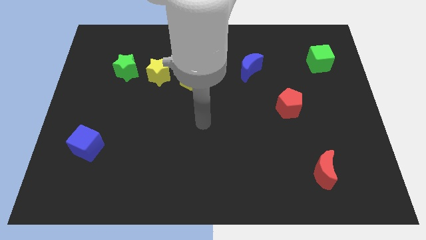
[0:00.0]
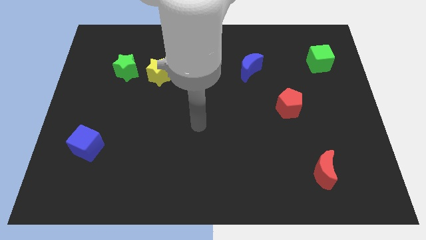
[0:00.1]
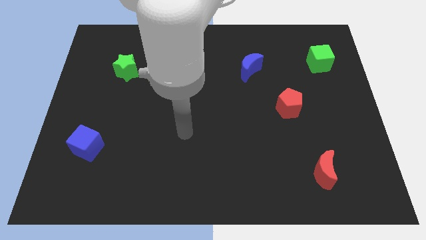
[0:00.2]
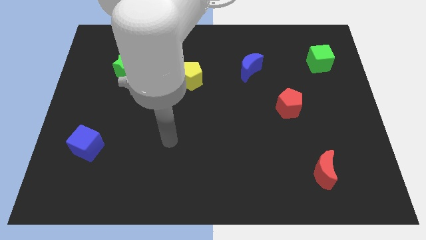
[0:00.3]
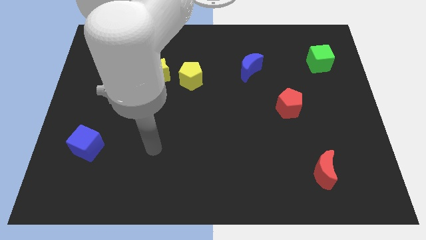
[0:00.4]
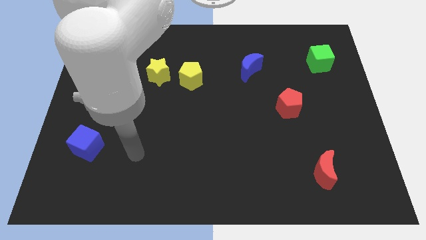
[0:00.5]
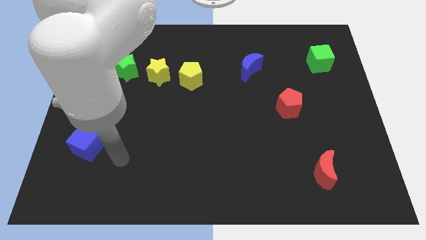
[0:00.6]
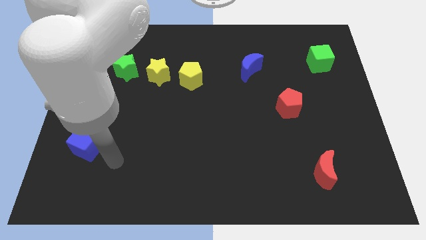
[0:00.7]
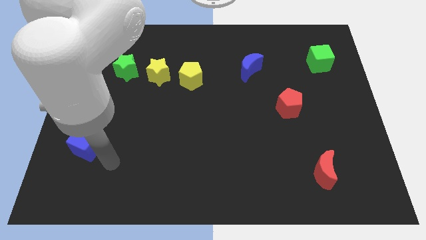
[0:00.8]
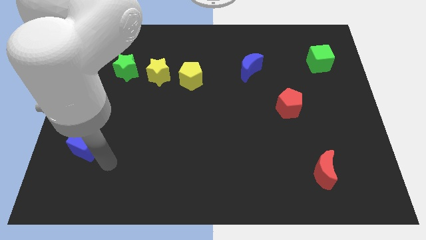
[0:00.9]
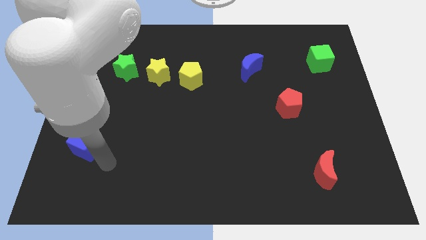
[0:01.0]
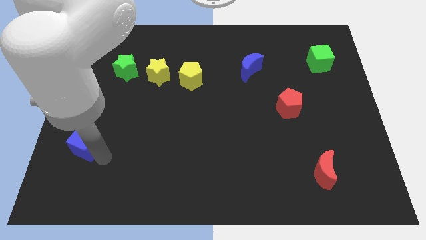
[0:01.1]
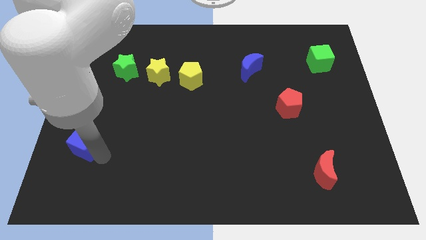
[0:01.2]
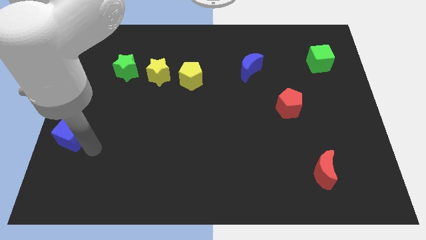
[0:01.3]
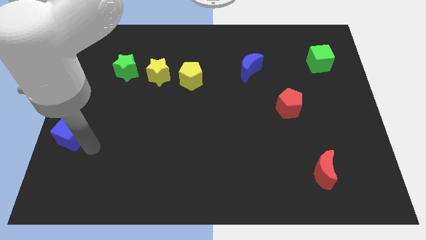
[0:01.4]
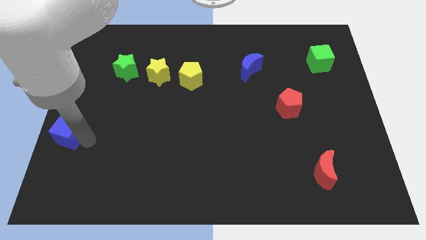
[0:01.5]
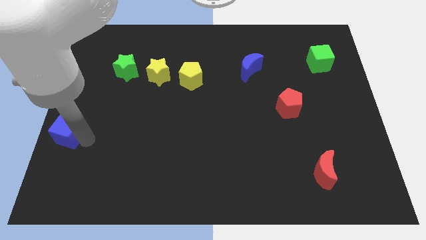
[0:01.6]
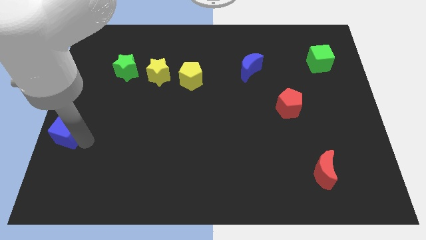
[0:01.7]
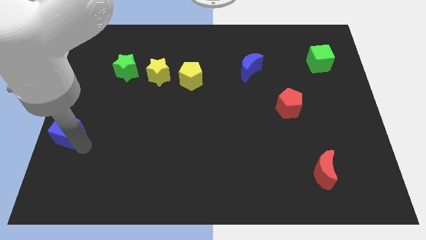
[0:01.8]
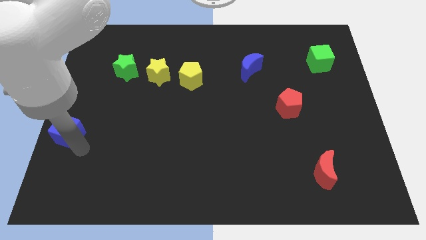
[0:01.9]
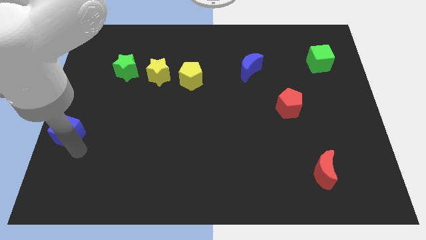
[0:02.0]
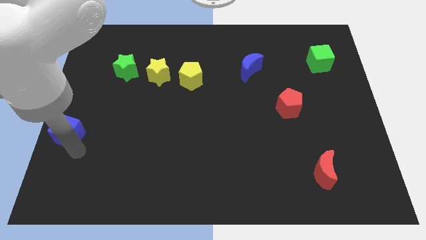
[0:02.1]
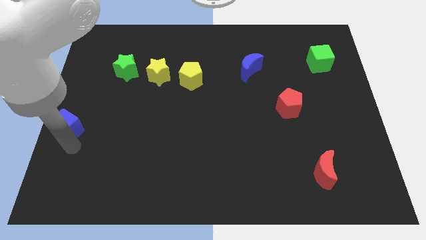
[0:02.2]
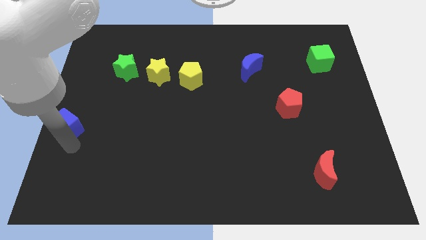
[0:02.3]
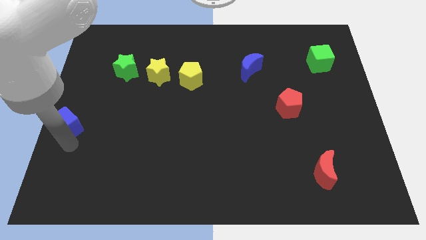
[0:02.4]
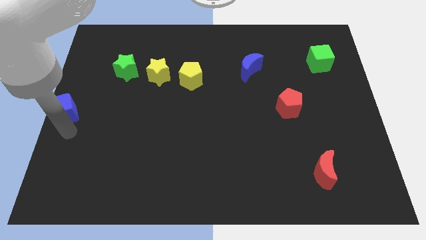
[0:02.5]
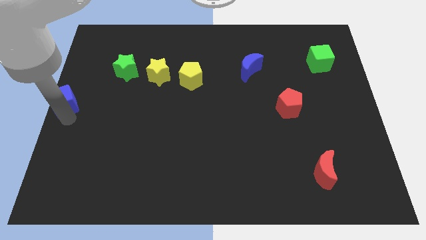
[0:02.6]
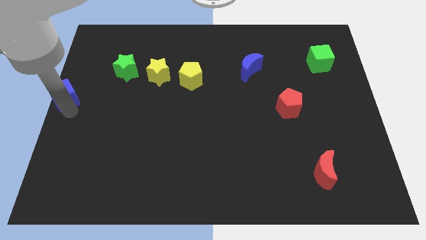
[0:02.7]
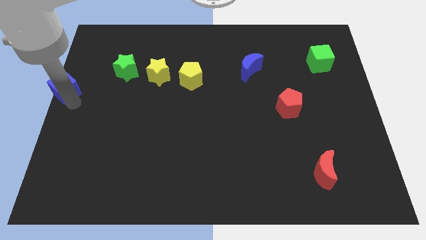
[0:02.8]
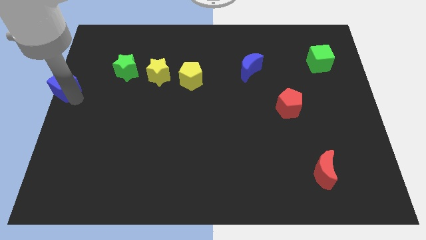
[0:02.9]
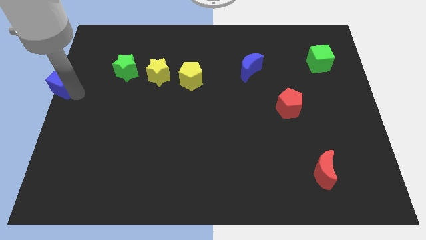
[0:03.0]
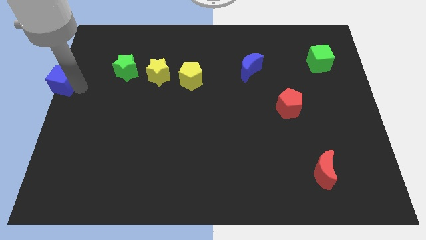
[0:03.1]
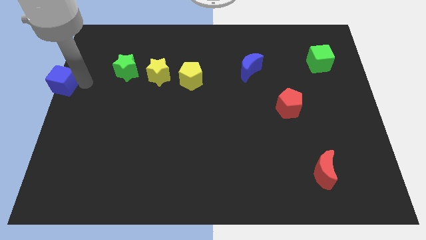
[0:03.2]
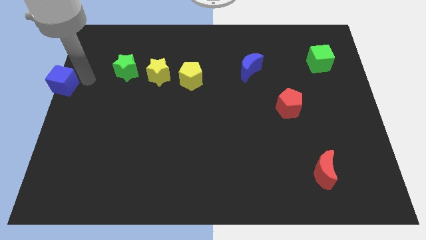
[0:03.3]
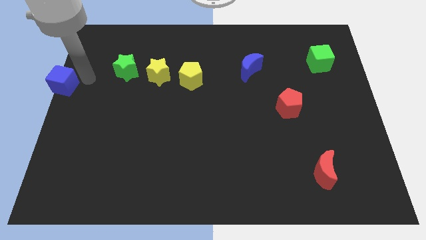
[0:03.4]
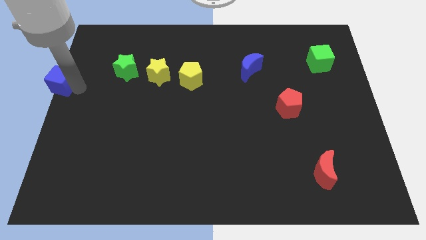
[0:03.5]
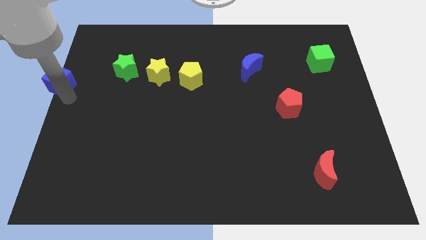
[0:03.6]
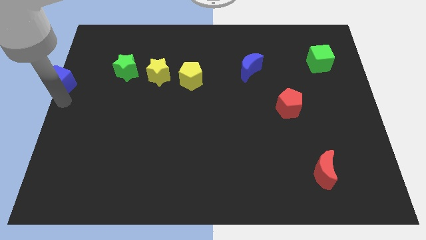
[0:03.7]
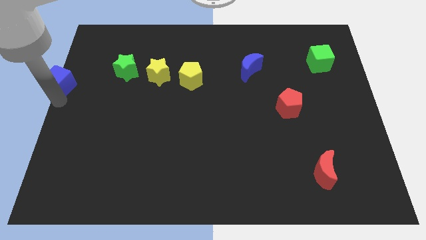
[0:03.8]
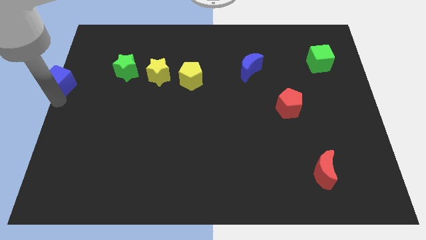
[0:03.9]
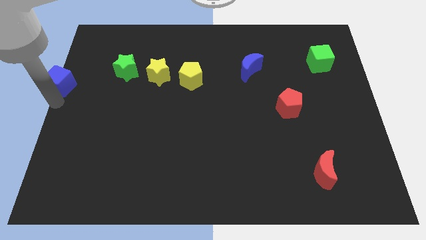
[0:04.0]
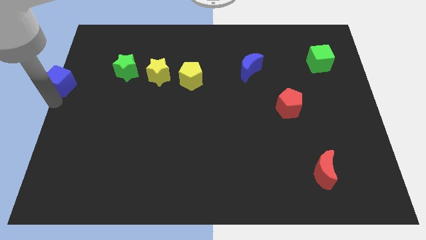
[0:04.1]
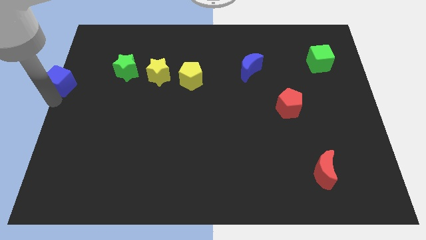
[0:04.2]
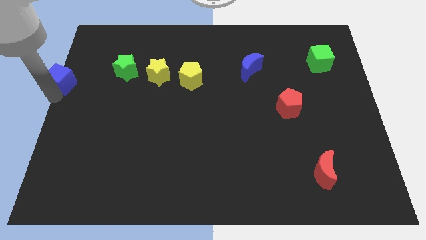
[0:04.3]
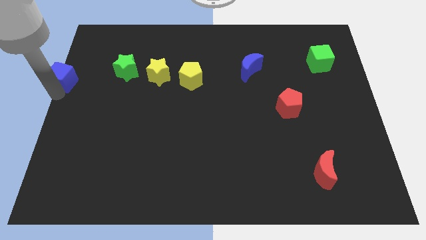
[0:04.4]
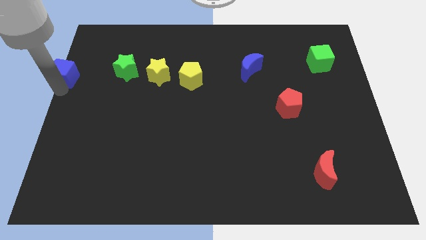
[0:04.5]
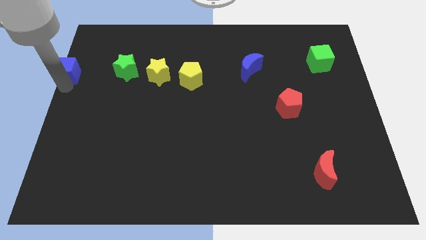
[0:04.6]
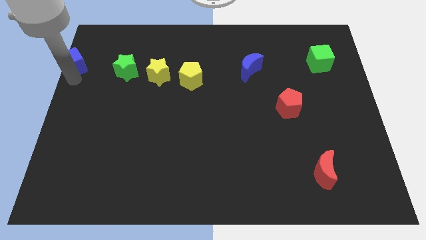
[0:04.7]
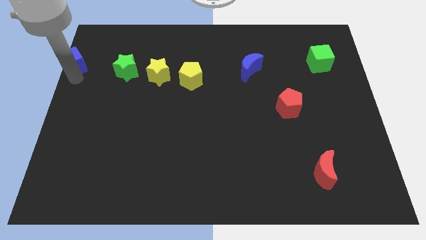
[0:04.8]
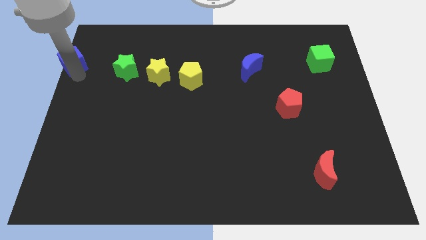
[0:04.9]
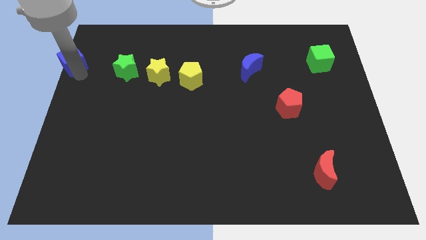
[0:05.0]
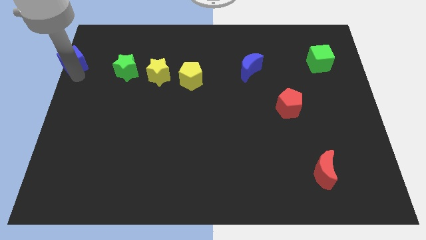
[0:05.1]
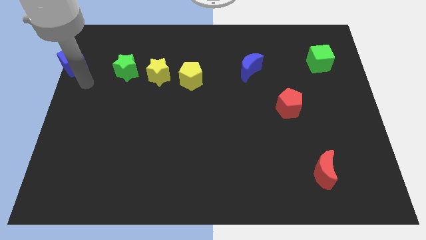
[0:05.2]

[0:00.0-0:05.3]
move the blue cube to the left side of the green star

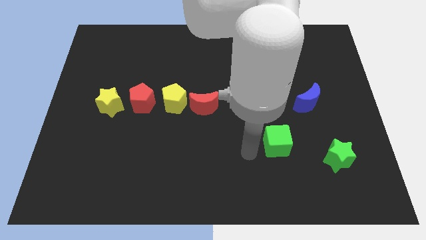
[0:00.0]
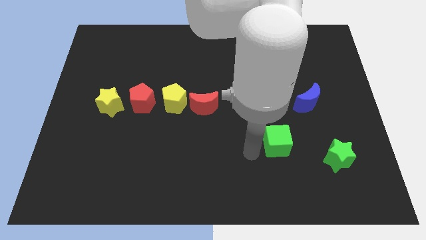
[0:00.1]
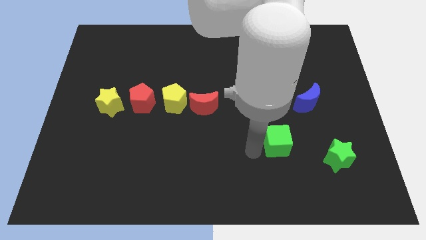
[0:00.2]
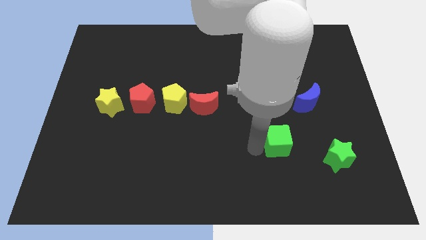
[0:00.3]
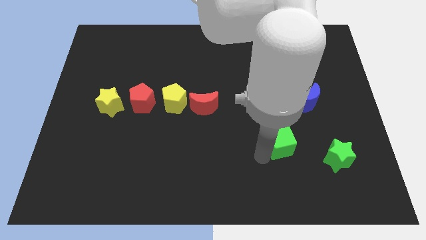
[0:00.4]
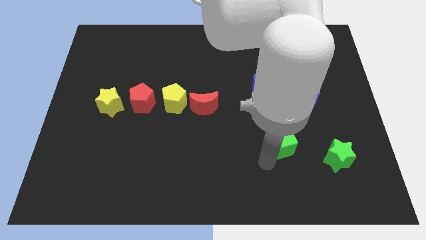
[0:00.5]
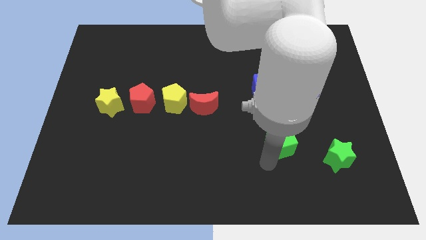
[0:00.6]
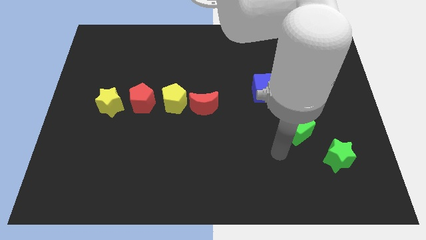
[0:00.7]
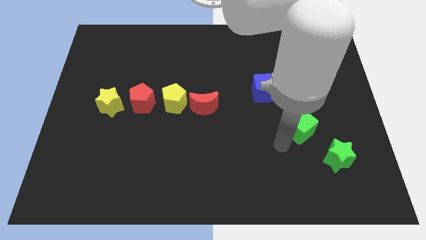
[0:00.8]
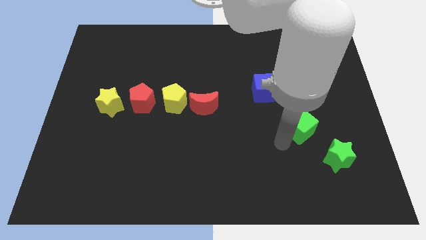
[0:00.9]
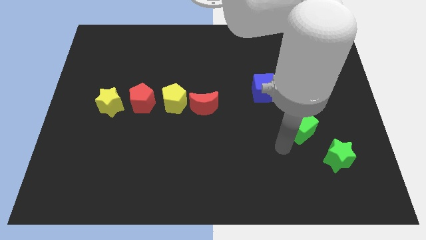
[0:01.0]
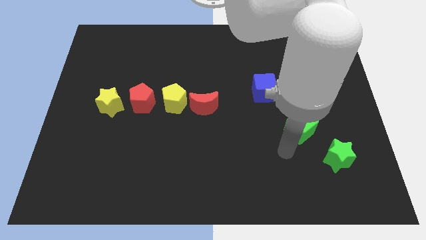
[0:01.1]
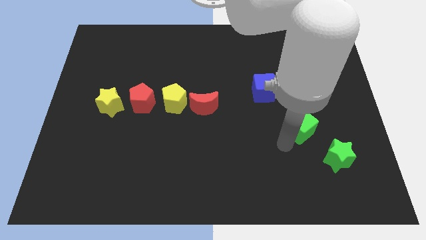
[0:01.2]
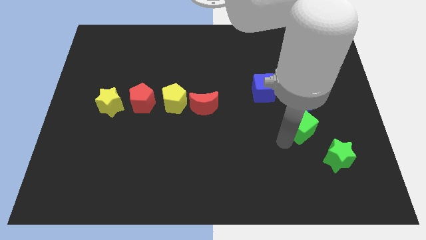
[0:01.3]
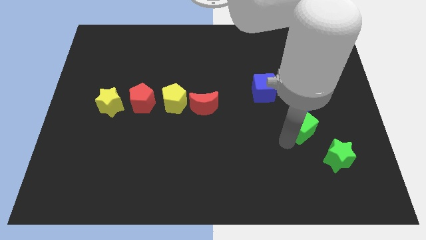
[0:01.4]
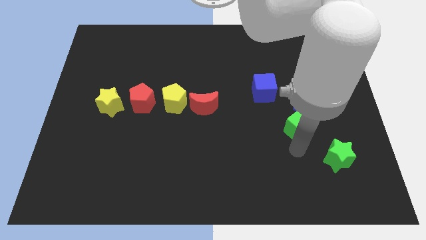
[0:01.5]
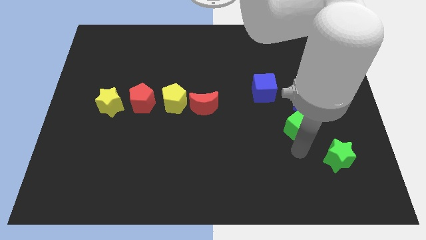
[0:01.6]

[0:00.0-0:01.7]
place the green cube below the blue crescent

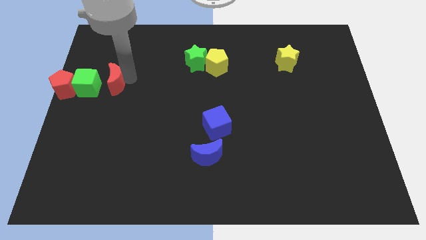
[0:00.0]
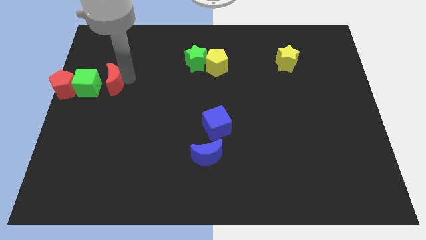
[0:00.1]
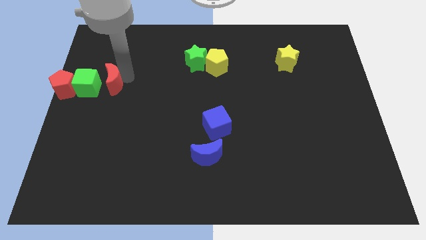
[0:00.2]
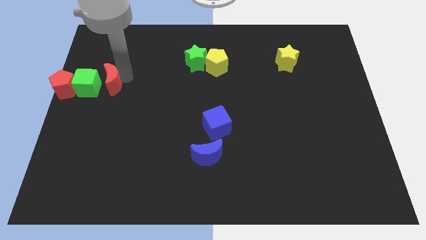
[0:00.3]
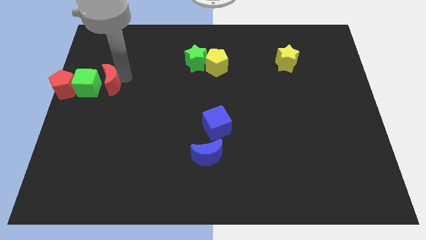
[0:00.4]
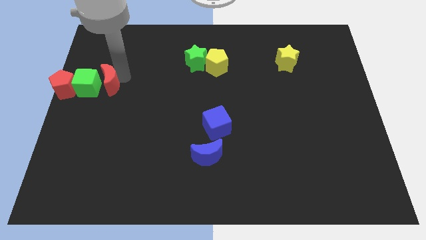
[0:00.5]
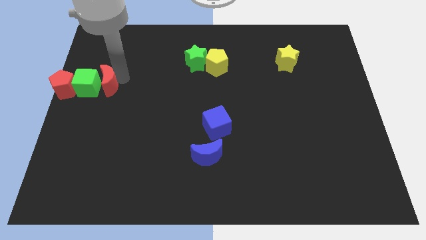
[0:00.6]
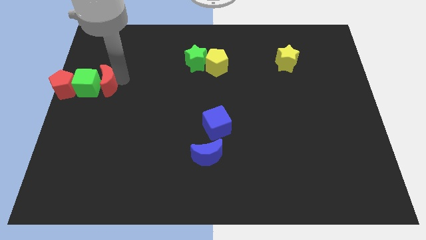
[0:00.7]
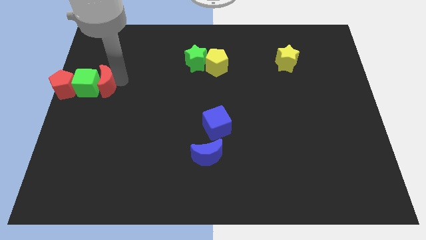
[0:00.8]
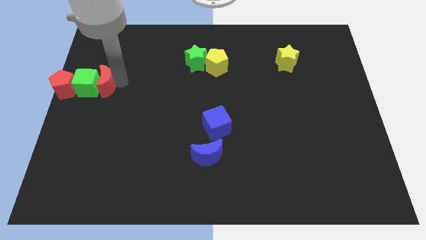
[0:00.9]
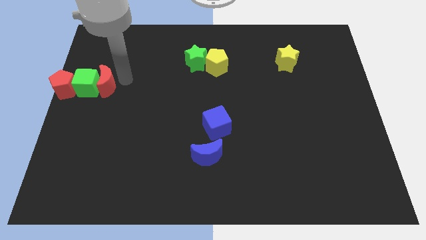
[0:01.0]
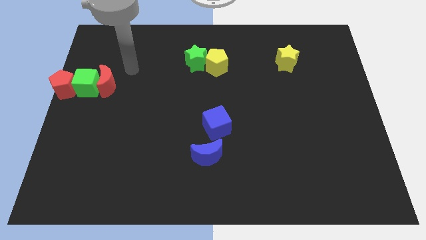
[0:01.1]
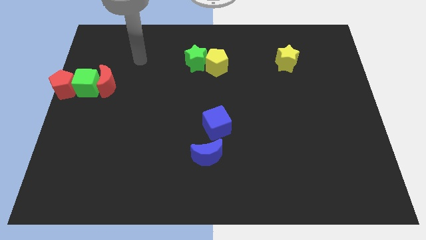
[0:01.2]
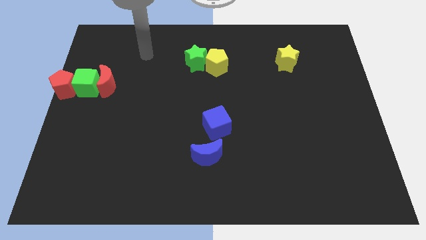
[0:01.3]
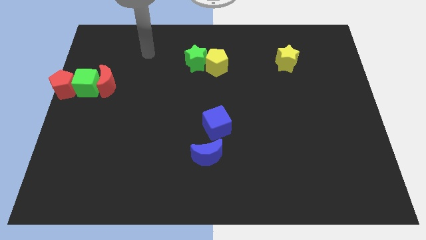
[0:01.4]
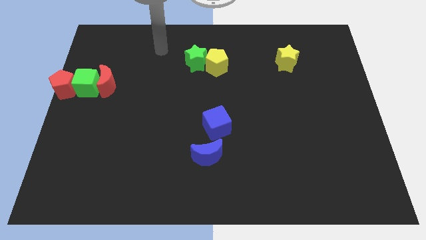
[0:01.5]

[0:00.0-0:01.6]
push the red moon into the green cube

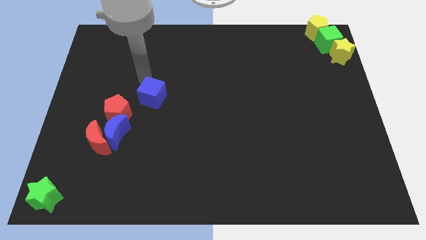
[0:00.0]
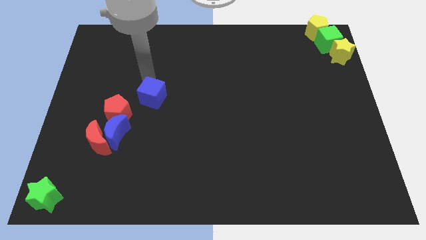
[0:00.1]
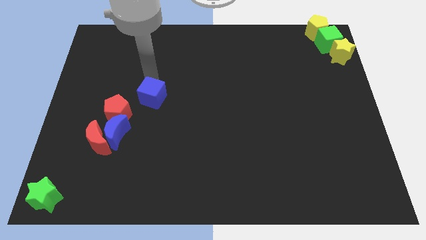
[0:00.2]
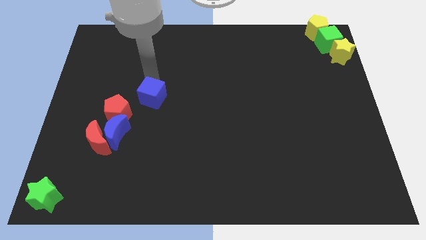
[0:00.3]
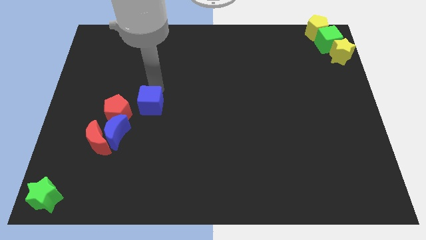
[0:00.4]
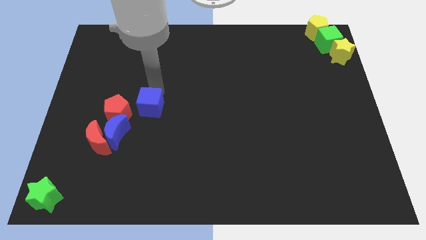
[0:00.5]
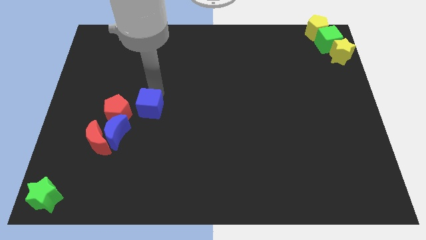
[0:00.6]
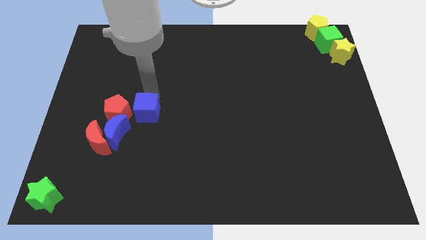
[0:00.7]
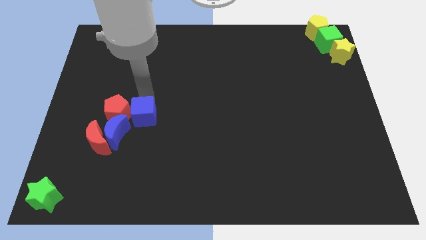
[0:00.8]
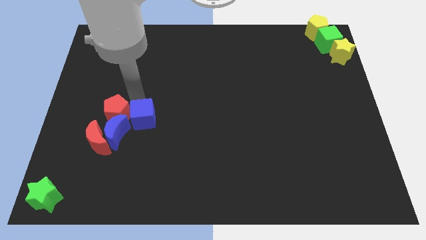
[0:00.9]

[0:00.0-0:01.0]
place the blue cube right to the red pentagon
